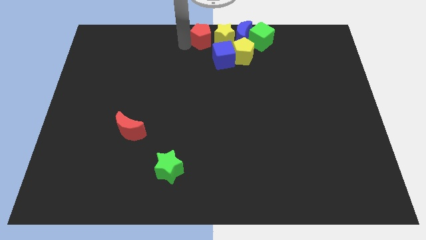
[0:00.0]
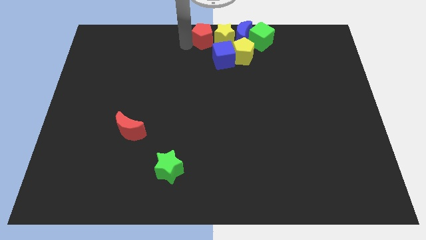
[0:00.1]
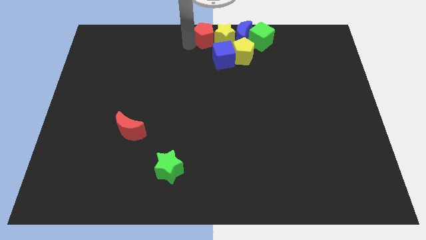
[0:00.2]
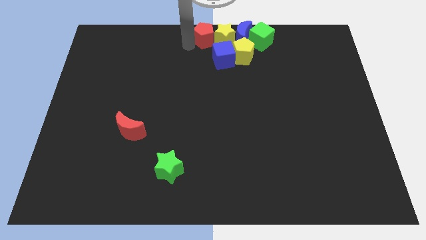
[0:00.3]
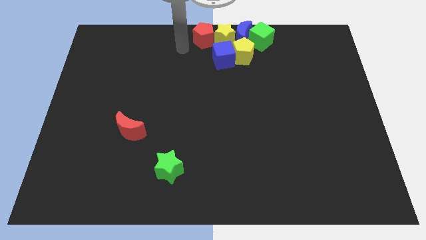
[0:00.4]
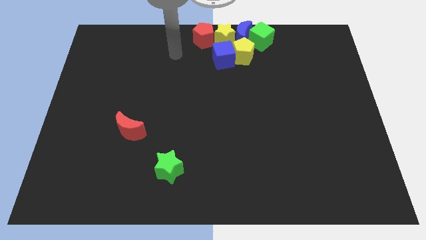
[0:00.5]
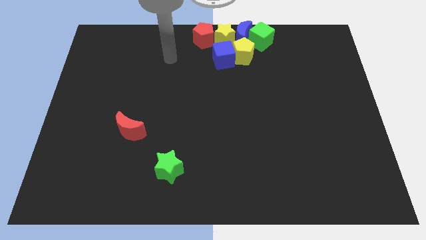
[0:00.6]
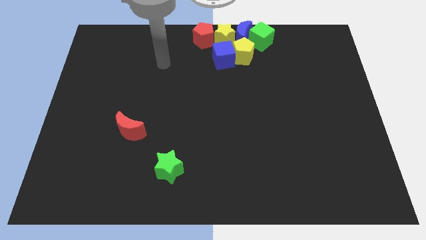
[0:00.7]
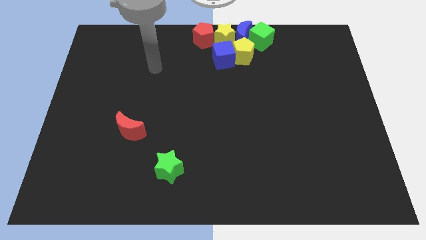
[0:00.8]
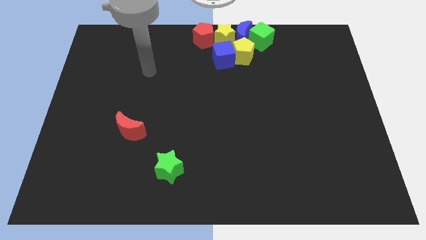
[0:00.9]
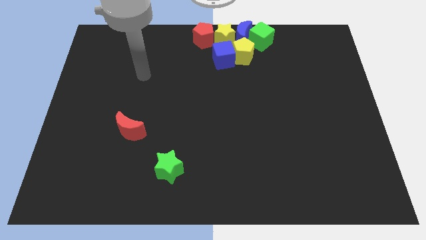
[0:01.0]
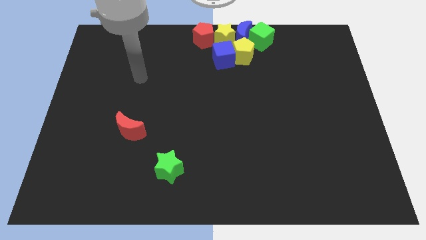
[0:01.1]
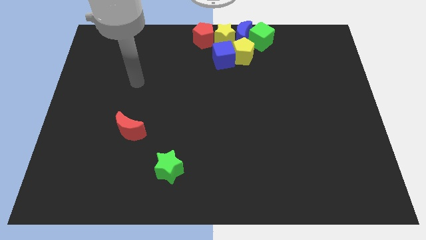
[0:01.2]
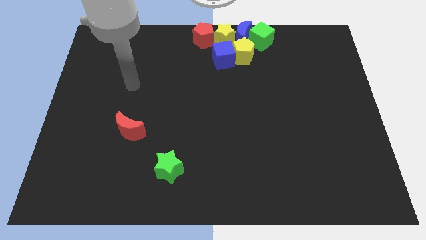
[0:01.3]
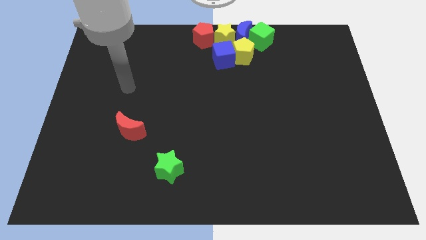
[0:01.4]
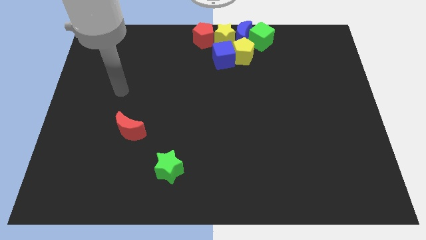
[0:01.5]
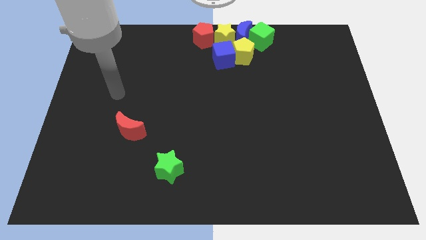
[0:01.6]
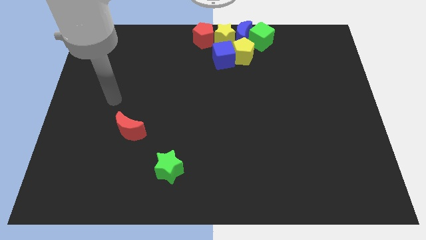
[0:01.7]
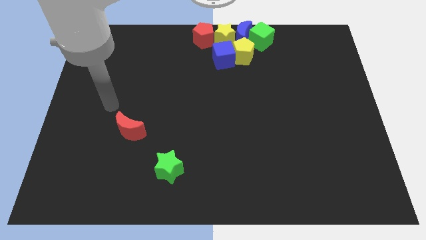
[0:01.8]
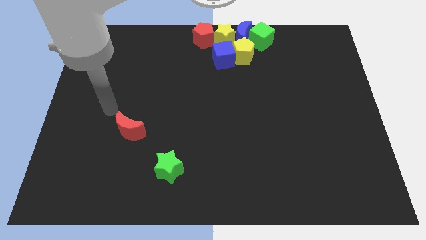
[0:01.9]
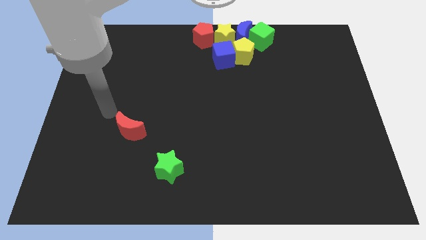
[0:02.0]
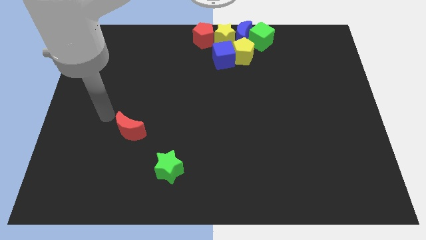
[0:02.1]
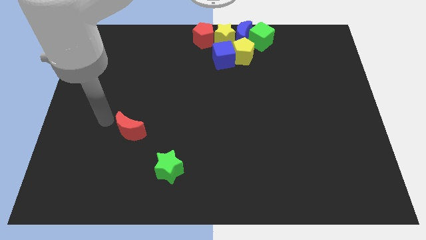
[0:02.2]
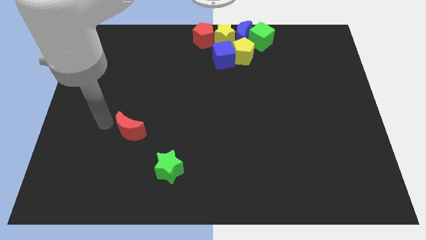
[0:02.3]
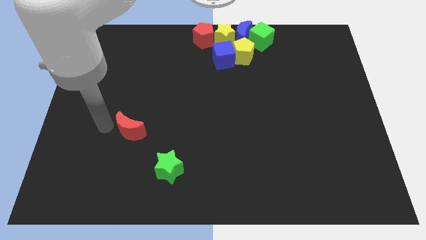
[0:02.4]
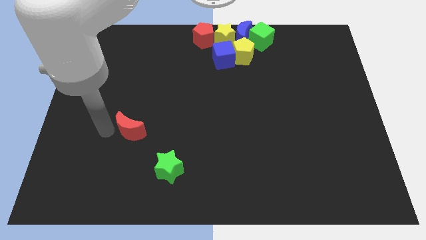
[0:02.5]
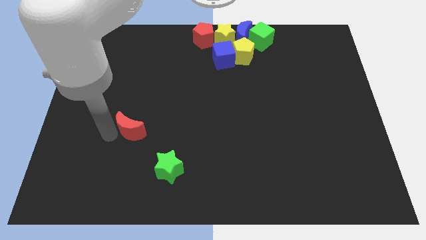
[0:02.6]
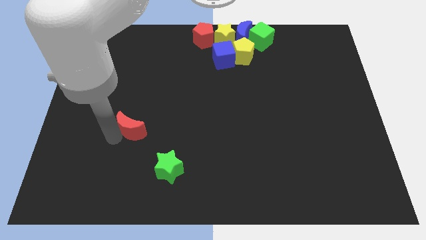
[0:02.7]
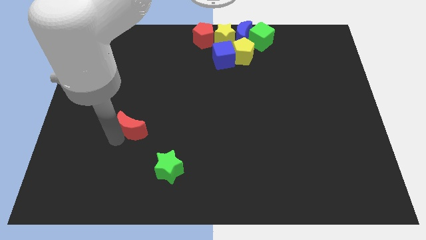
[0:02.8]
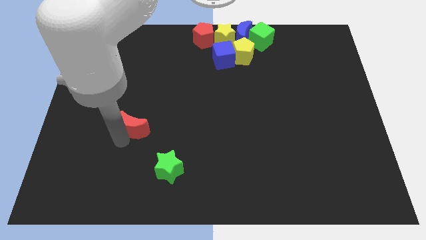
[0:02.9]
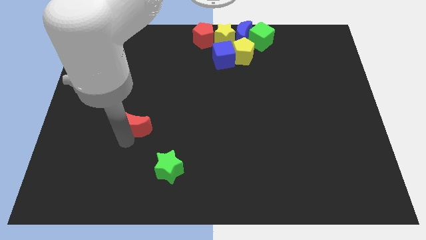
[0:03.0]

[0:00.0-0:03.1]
move your arm to the bottom of the red crescent

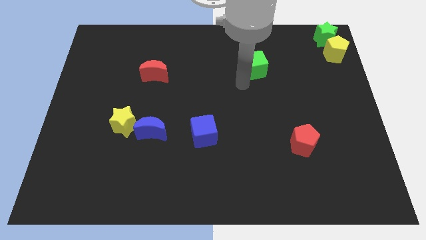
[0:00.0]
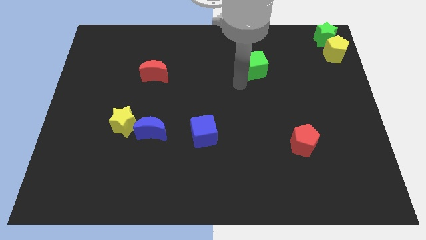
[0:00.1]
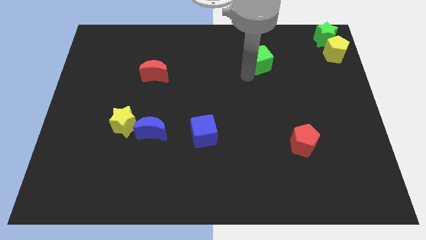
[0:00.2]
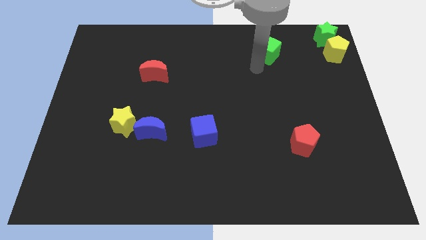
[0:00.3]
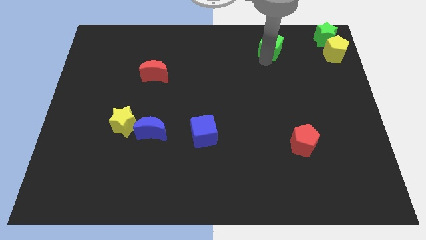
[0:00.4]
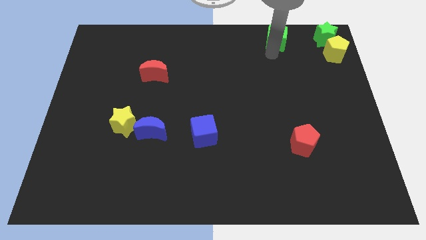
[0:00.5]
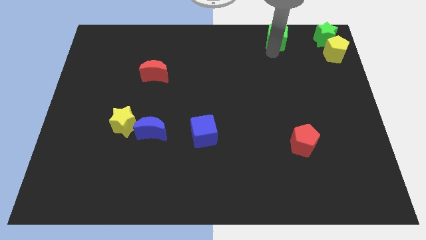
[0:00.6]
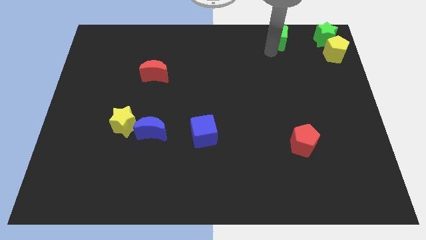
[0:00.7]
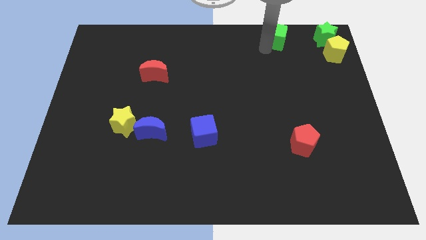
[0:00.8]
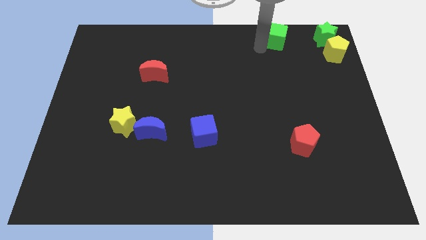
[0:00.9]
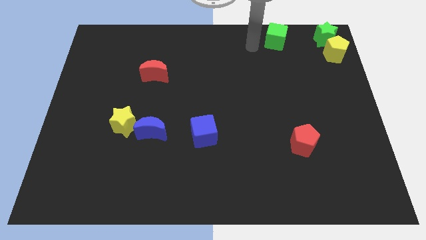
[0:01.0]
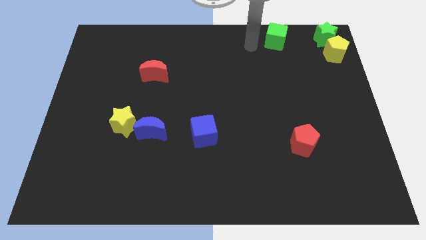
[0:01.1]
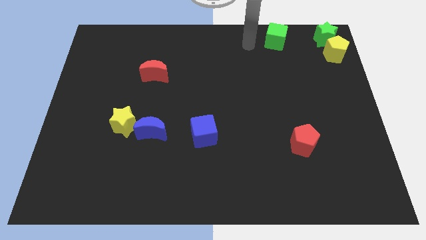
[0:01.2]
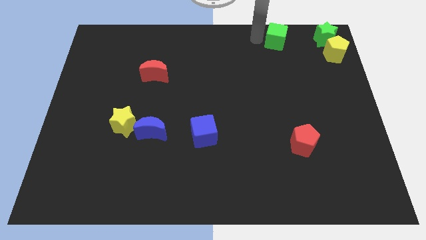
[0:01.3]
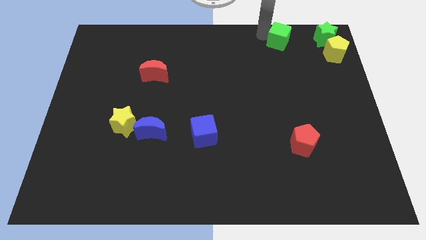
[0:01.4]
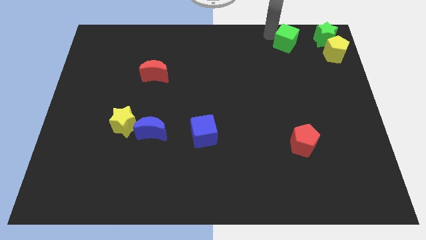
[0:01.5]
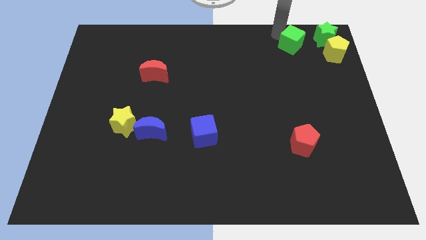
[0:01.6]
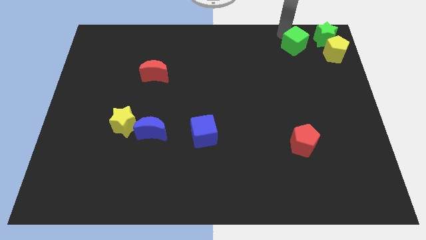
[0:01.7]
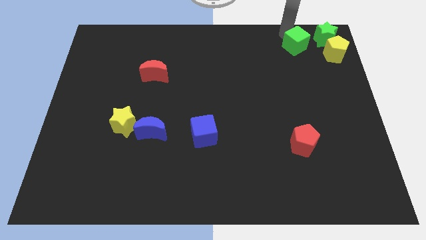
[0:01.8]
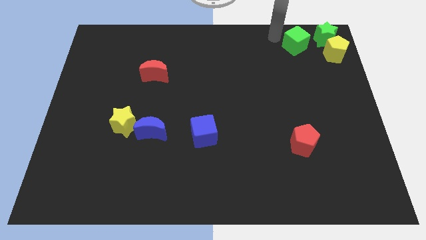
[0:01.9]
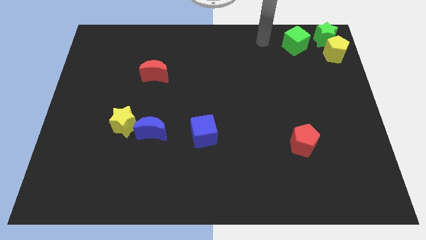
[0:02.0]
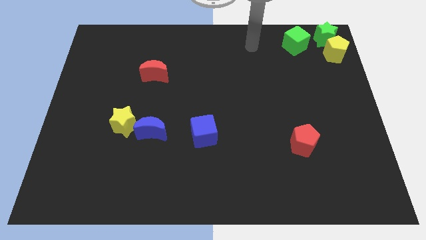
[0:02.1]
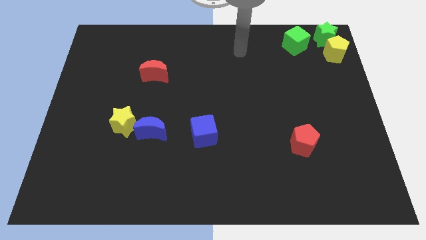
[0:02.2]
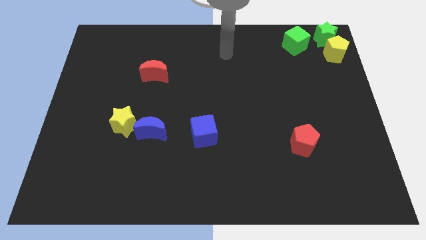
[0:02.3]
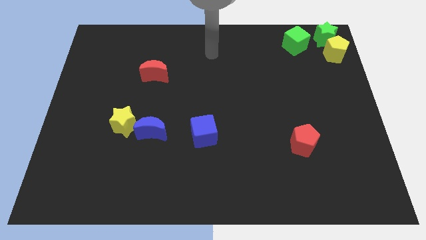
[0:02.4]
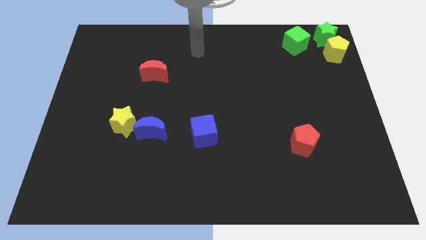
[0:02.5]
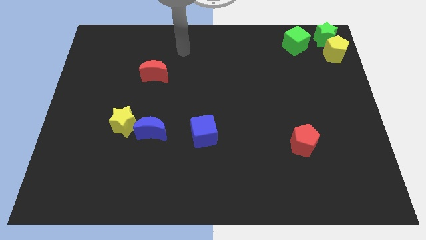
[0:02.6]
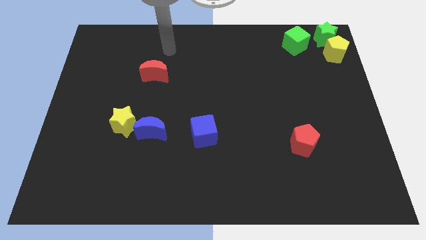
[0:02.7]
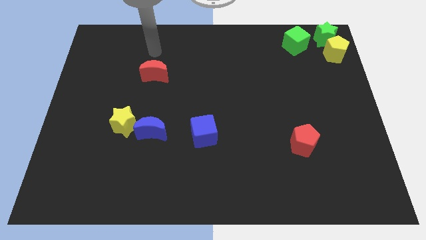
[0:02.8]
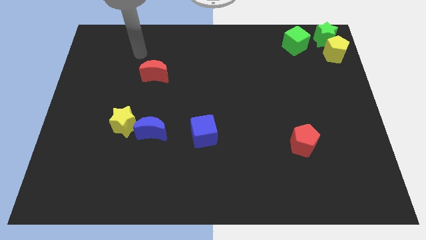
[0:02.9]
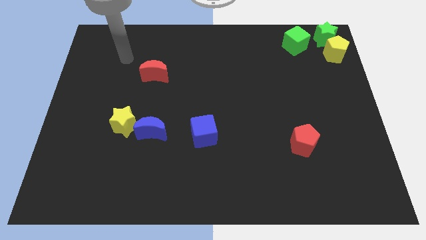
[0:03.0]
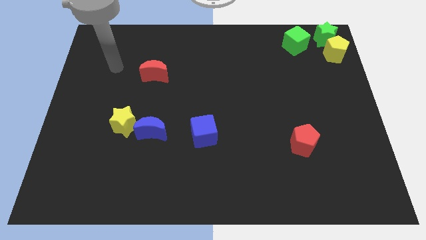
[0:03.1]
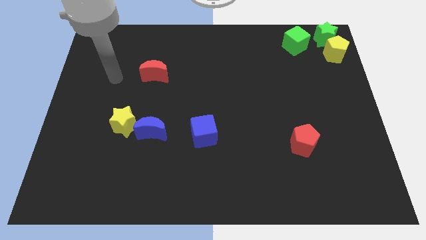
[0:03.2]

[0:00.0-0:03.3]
move the green cube on the left side of the green star

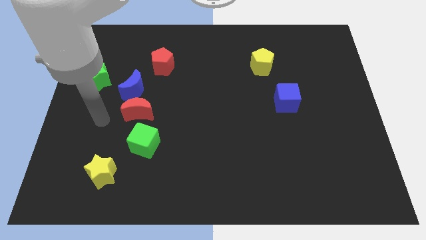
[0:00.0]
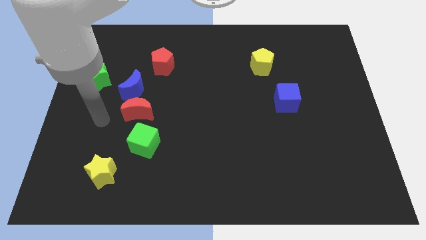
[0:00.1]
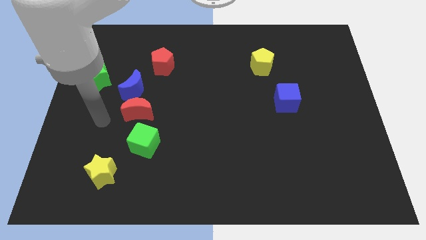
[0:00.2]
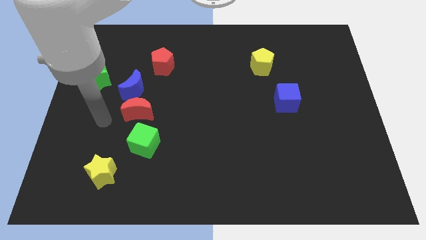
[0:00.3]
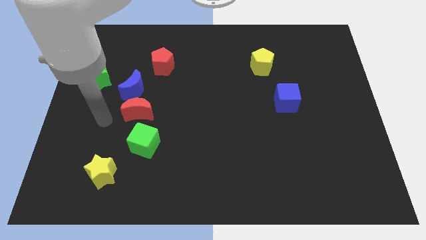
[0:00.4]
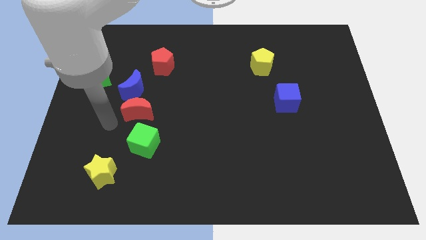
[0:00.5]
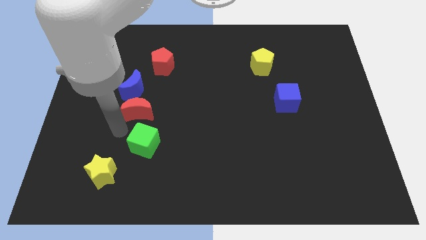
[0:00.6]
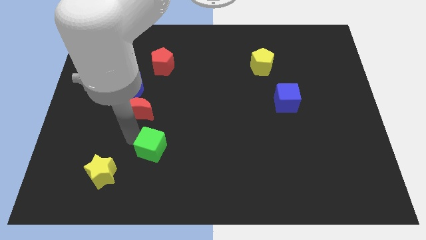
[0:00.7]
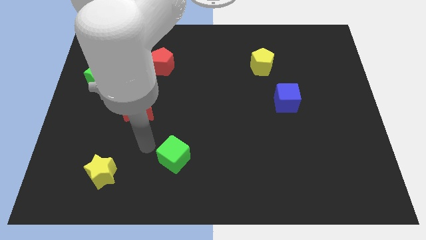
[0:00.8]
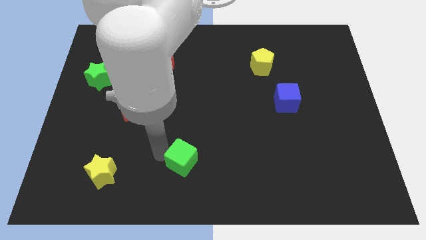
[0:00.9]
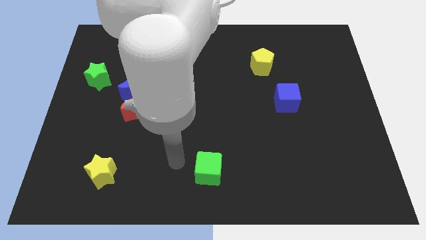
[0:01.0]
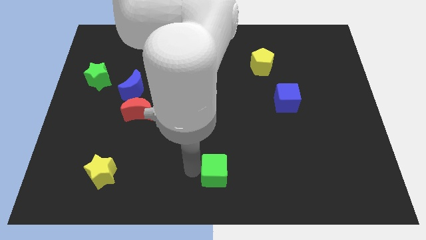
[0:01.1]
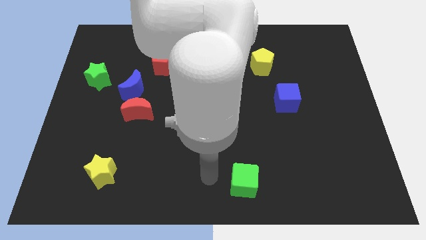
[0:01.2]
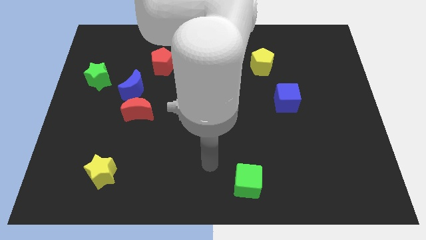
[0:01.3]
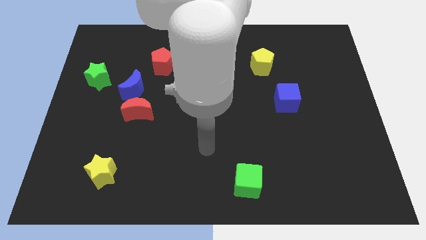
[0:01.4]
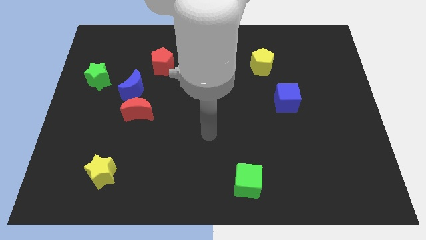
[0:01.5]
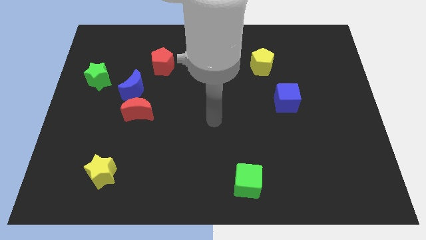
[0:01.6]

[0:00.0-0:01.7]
push the green cube away from the red moon

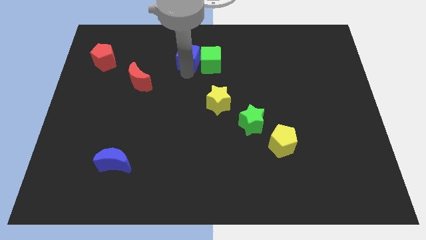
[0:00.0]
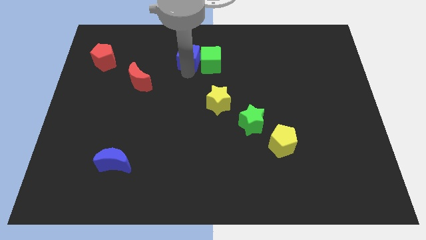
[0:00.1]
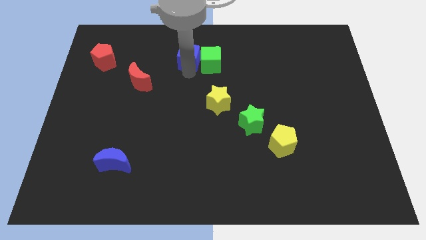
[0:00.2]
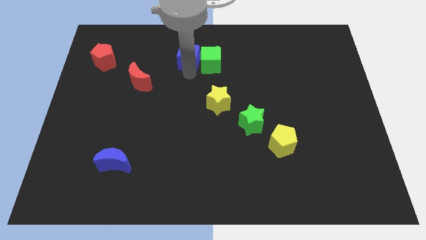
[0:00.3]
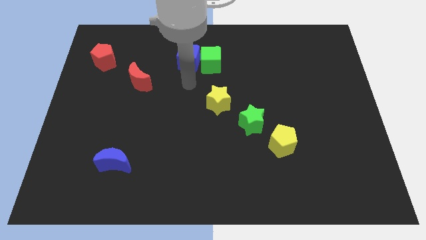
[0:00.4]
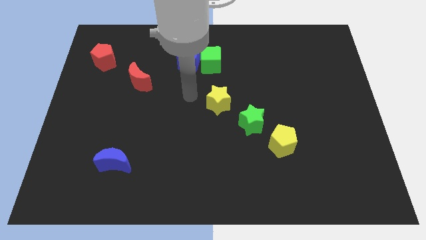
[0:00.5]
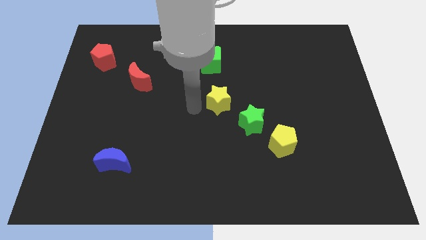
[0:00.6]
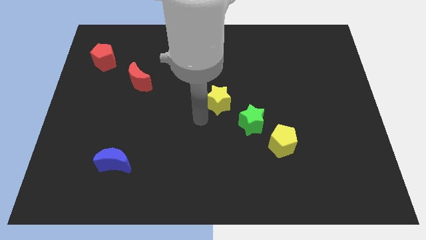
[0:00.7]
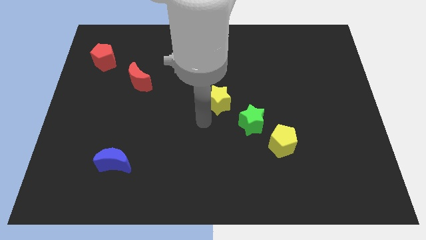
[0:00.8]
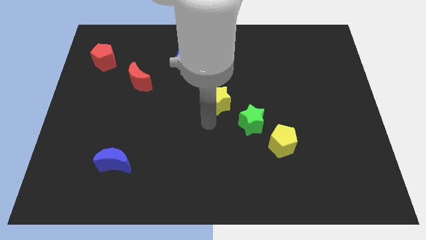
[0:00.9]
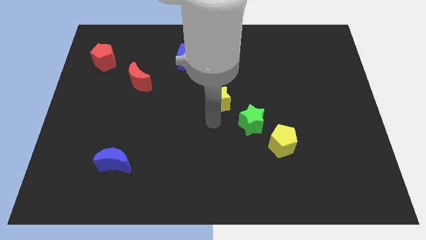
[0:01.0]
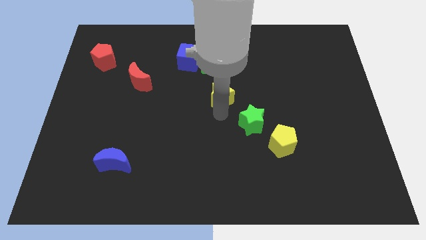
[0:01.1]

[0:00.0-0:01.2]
point your arm at the bottom of yellow star
